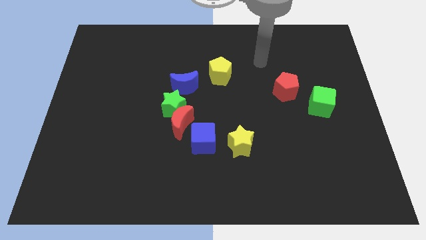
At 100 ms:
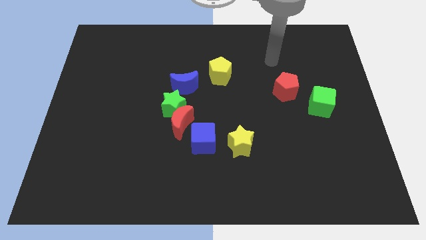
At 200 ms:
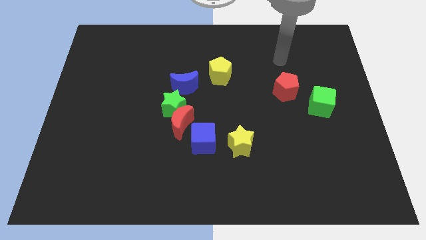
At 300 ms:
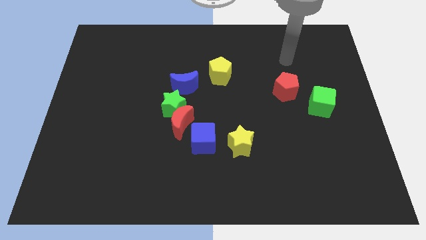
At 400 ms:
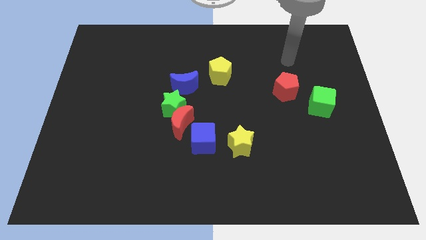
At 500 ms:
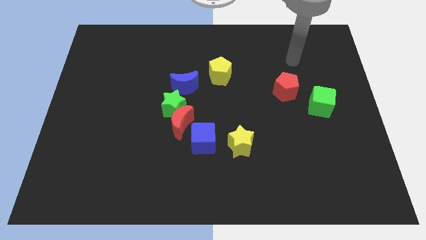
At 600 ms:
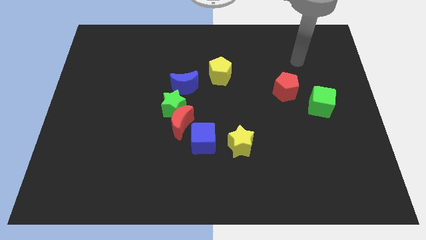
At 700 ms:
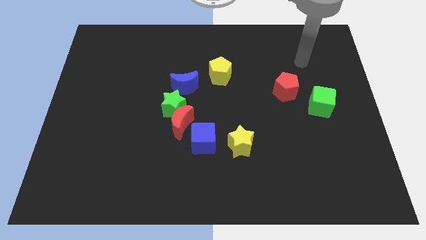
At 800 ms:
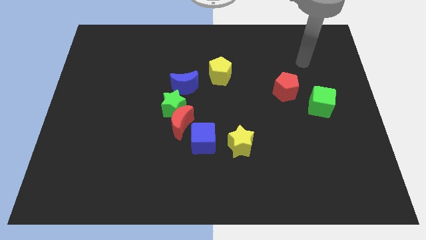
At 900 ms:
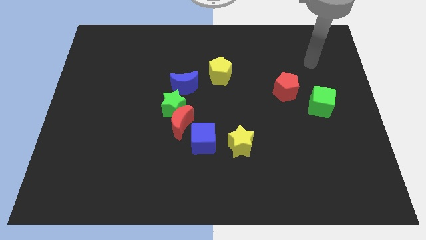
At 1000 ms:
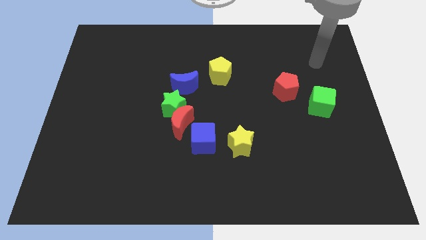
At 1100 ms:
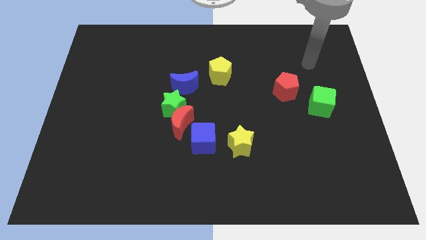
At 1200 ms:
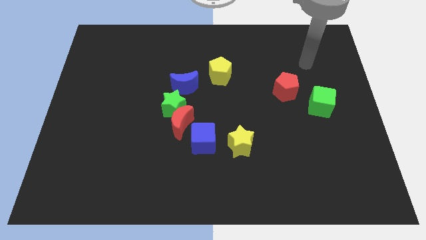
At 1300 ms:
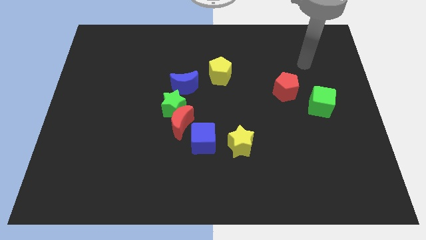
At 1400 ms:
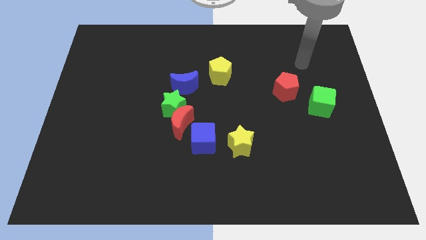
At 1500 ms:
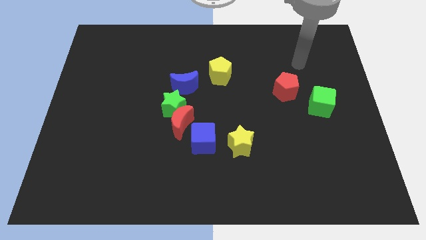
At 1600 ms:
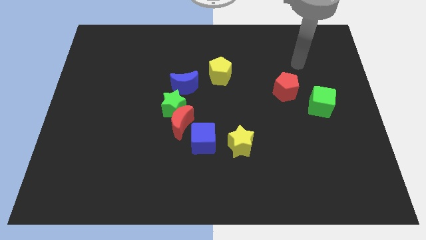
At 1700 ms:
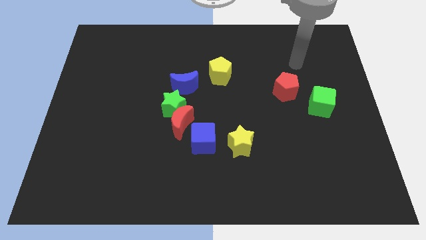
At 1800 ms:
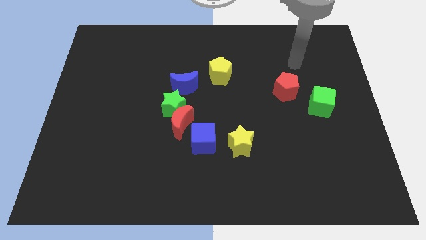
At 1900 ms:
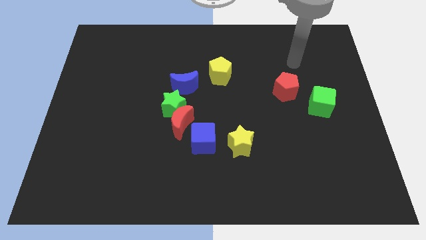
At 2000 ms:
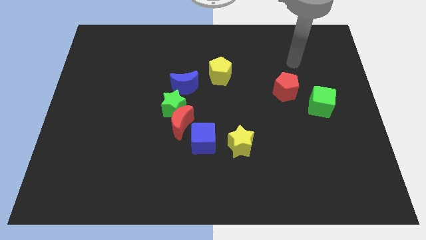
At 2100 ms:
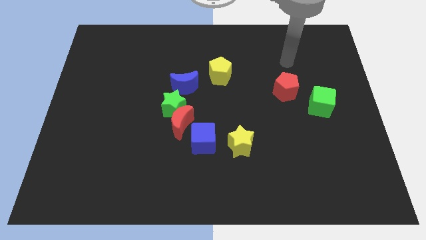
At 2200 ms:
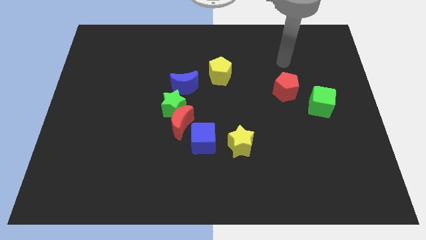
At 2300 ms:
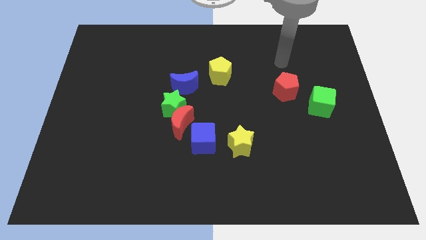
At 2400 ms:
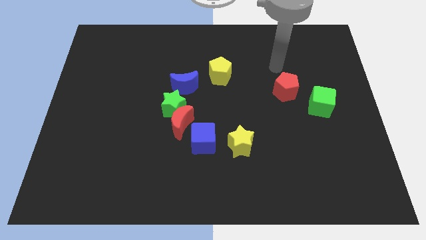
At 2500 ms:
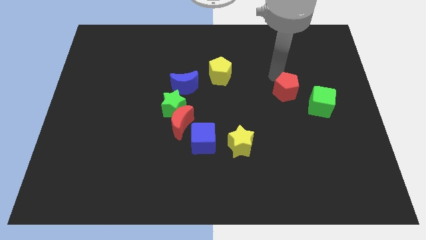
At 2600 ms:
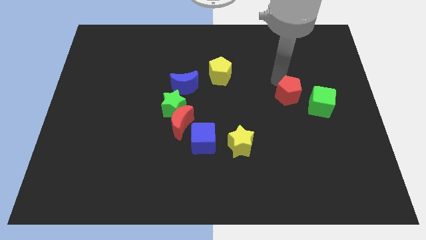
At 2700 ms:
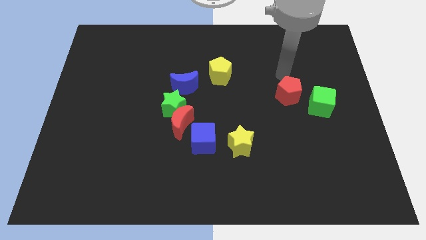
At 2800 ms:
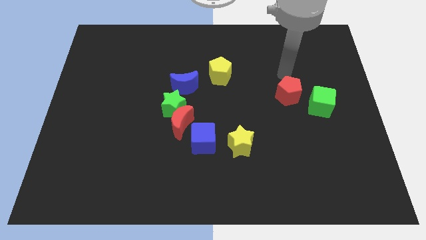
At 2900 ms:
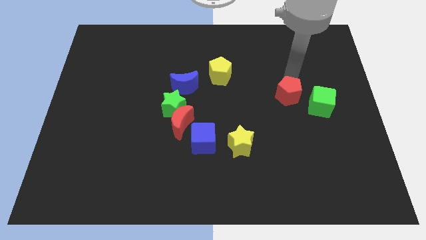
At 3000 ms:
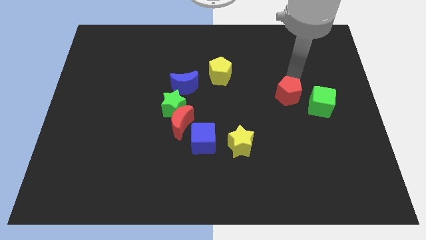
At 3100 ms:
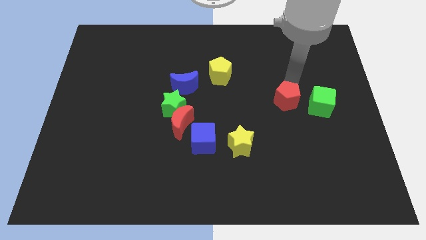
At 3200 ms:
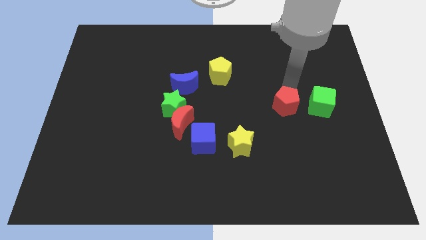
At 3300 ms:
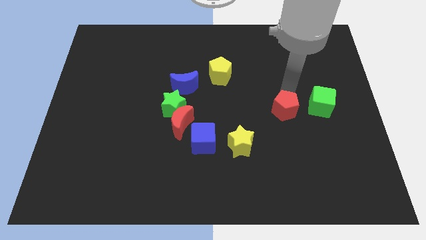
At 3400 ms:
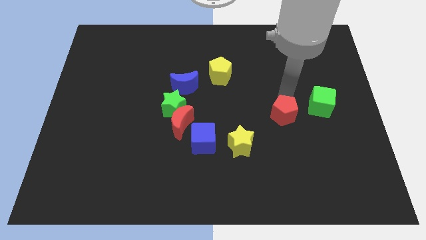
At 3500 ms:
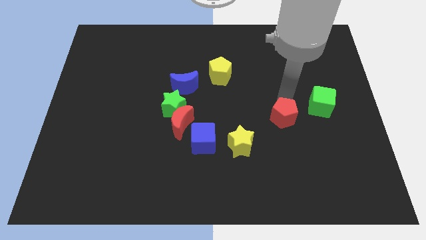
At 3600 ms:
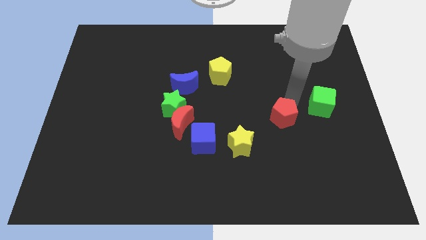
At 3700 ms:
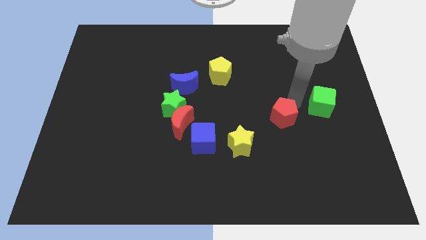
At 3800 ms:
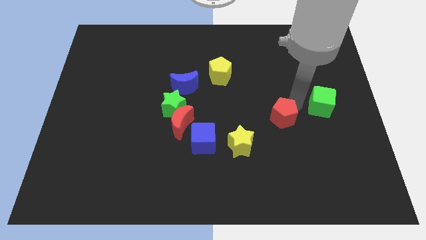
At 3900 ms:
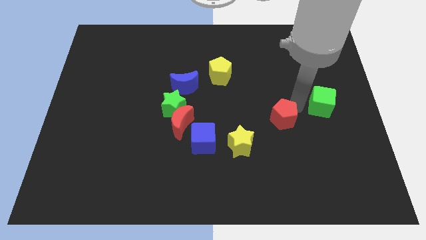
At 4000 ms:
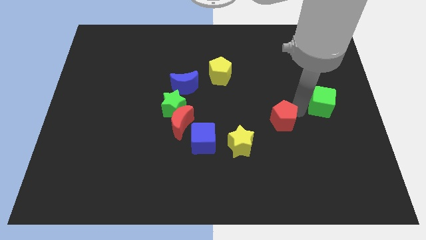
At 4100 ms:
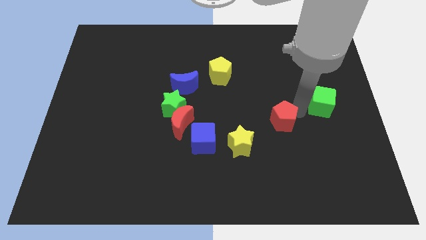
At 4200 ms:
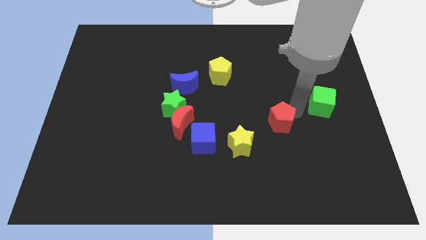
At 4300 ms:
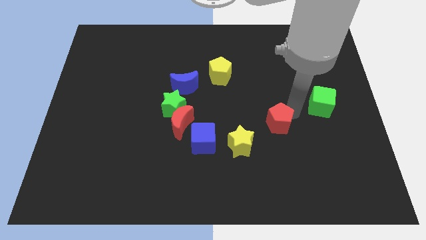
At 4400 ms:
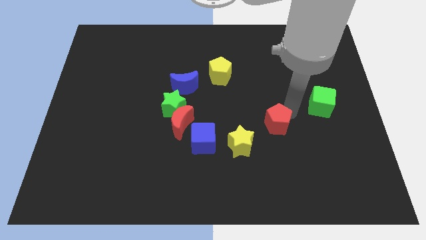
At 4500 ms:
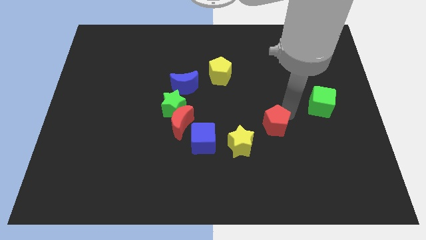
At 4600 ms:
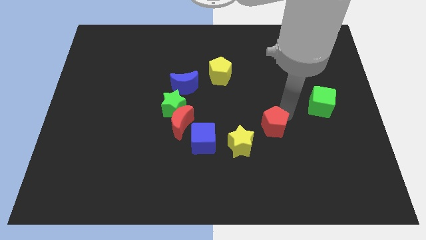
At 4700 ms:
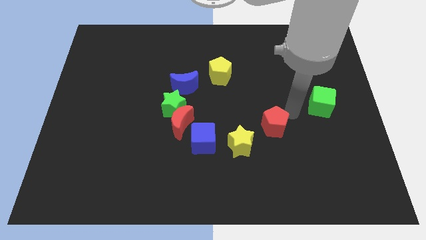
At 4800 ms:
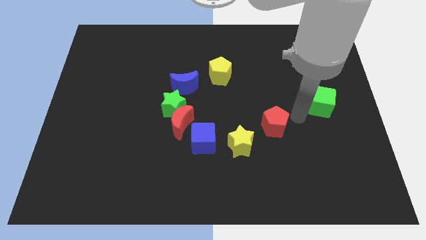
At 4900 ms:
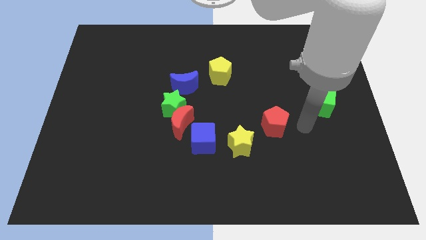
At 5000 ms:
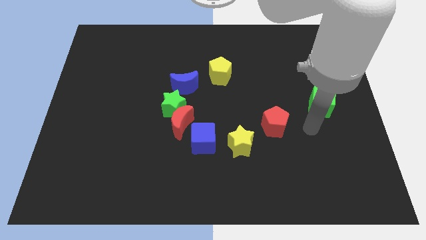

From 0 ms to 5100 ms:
push the red pentagon towards the bottom side of the board

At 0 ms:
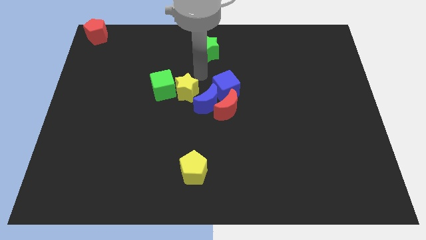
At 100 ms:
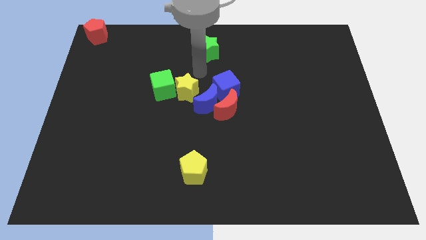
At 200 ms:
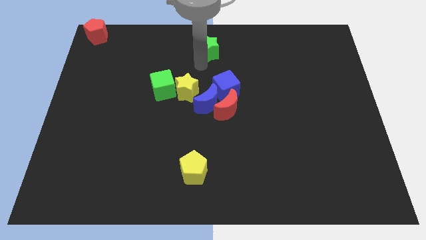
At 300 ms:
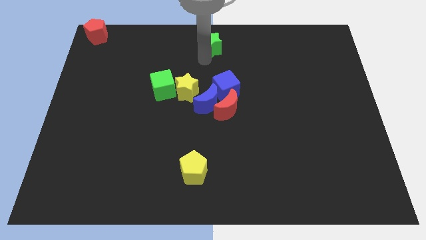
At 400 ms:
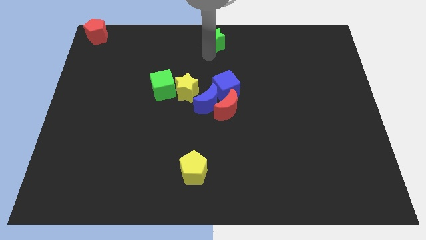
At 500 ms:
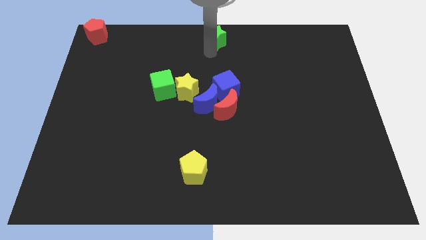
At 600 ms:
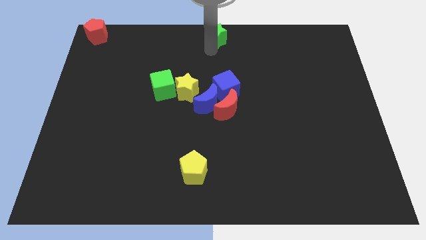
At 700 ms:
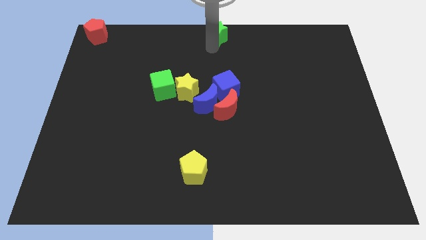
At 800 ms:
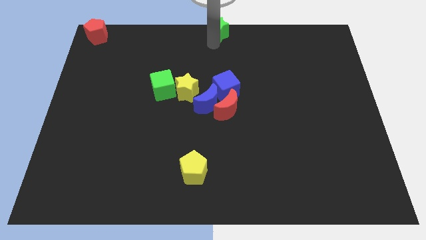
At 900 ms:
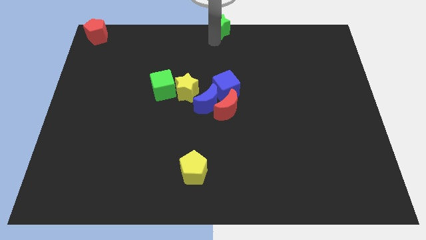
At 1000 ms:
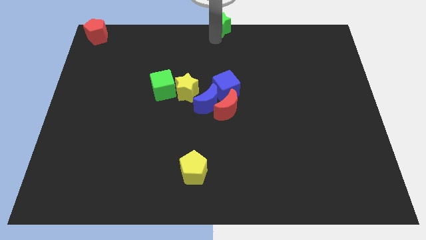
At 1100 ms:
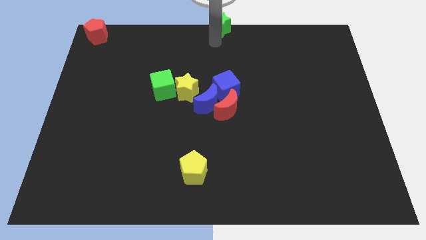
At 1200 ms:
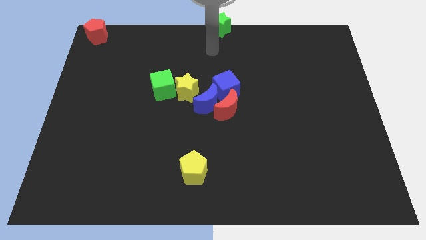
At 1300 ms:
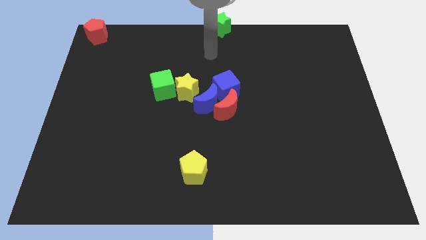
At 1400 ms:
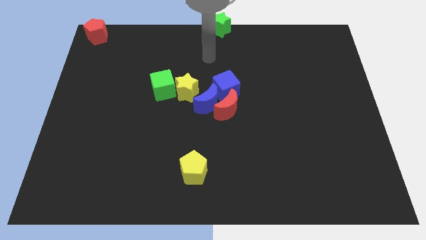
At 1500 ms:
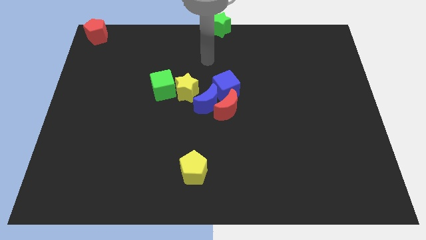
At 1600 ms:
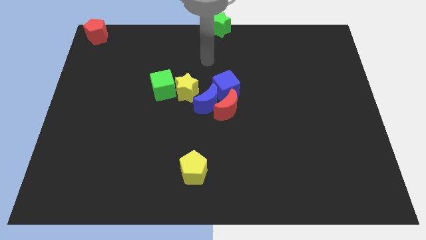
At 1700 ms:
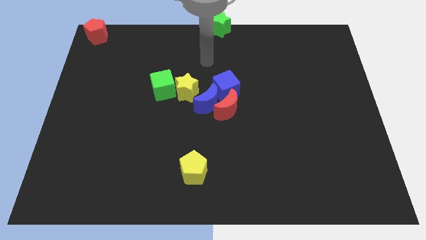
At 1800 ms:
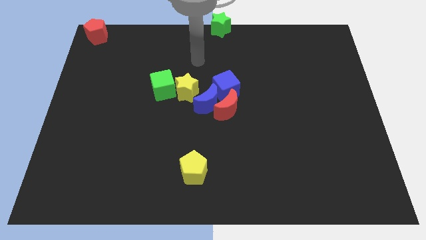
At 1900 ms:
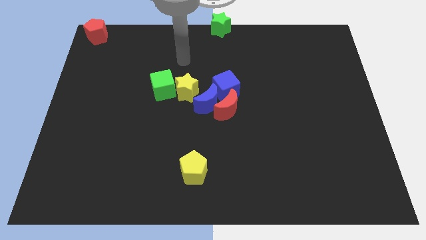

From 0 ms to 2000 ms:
push the green star to top center of the board

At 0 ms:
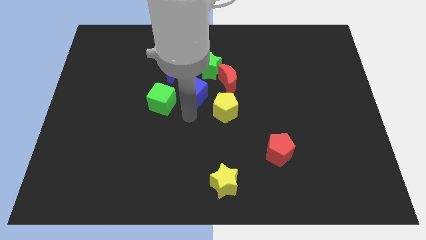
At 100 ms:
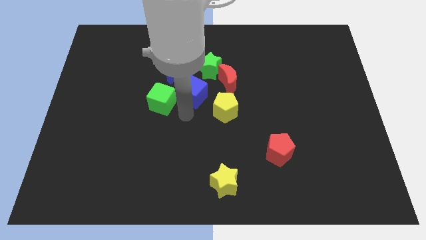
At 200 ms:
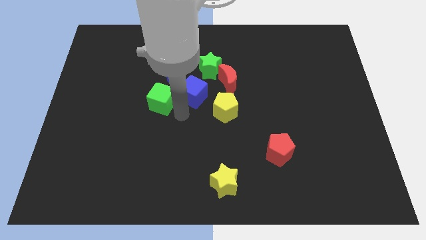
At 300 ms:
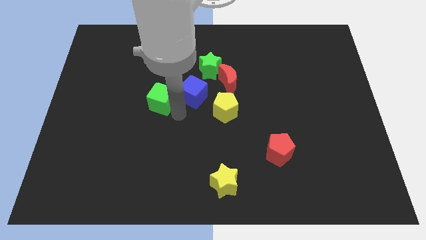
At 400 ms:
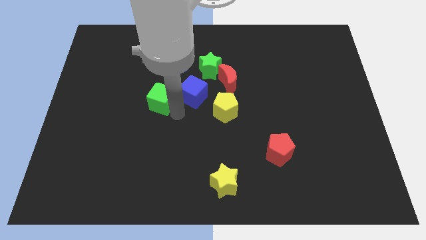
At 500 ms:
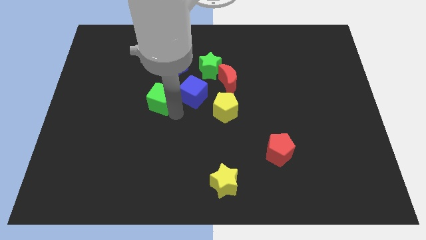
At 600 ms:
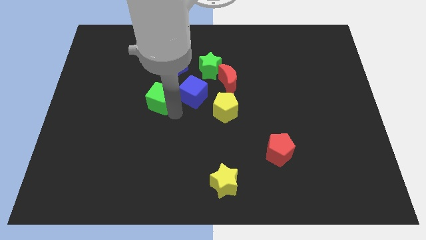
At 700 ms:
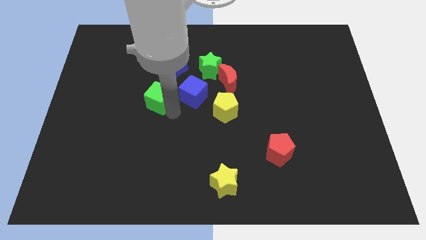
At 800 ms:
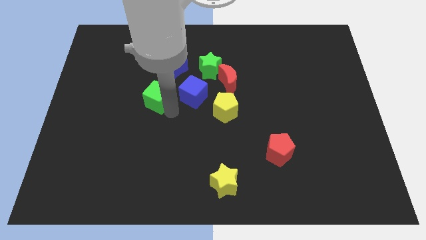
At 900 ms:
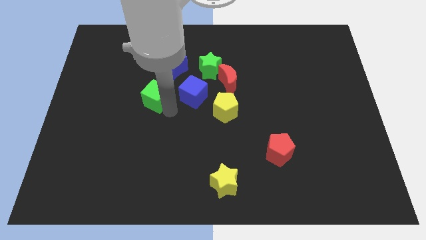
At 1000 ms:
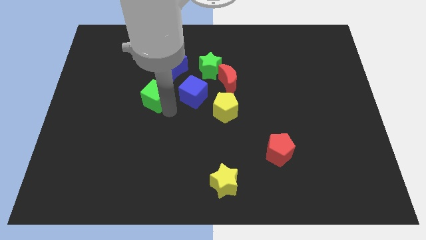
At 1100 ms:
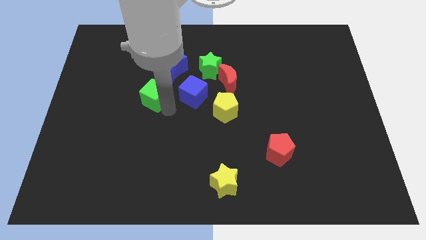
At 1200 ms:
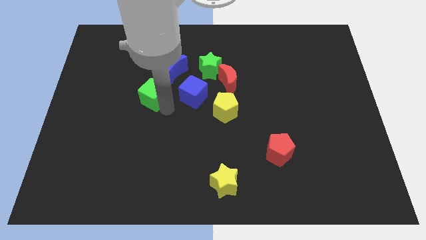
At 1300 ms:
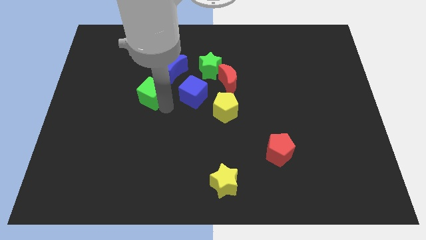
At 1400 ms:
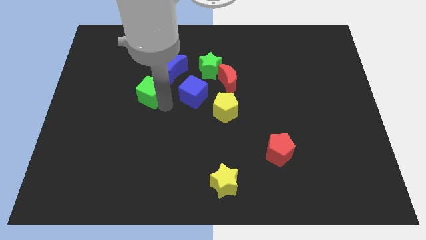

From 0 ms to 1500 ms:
push the green cube slightly to the left

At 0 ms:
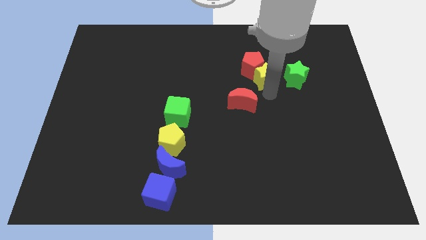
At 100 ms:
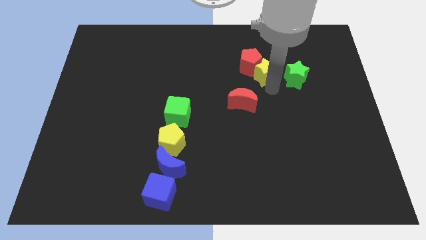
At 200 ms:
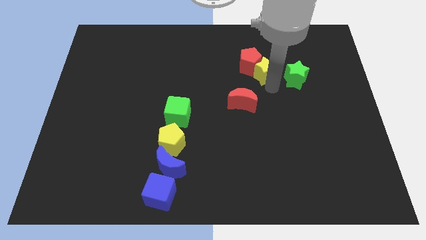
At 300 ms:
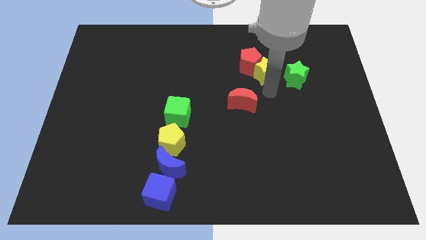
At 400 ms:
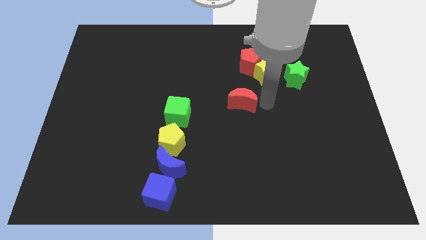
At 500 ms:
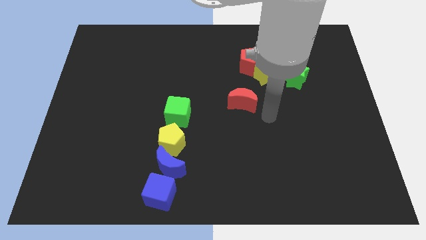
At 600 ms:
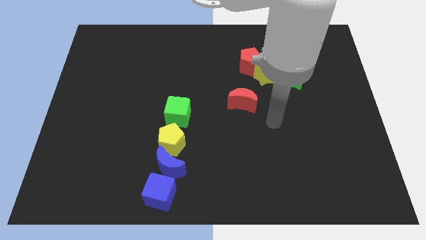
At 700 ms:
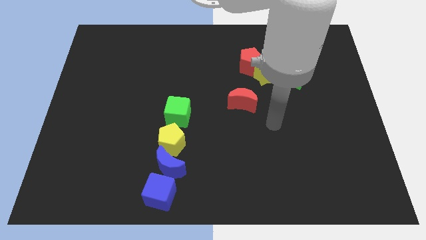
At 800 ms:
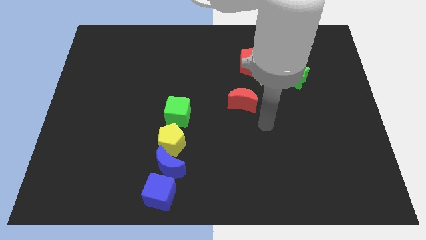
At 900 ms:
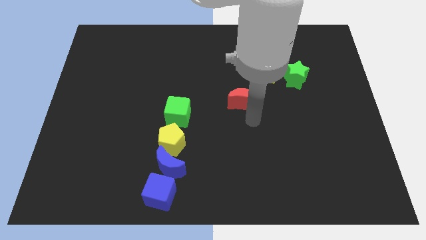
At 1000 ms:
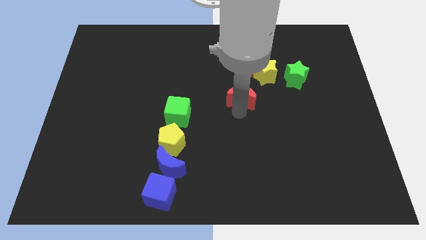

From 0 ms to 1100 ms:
push the yellow star into the red pentagon
